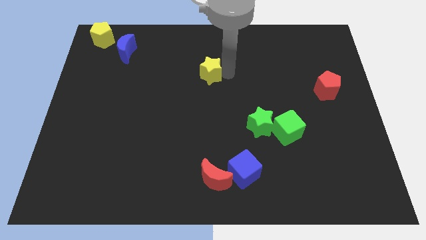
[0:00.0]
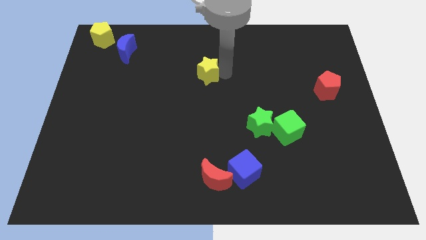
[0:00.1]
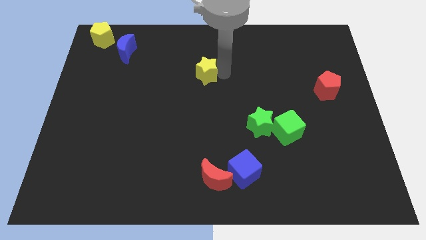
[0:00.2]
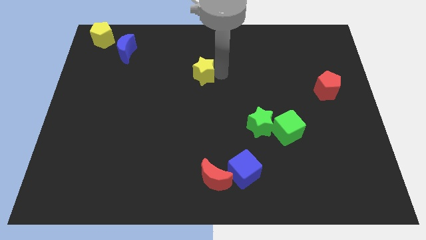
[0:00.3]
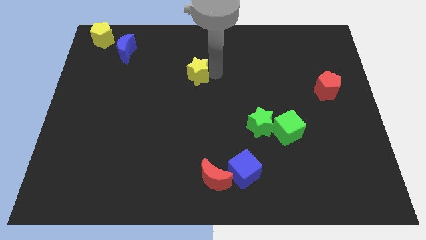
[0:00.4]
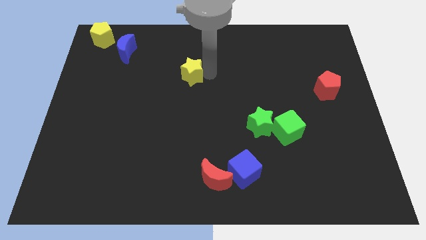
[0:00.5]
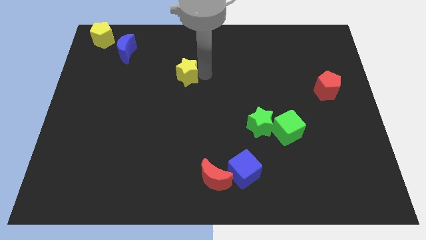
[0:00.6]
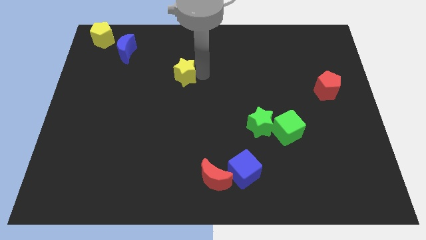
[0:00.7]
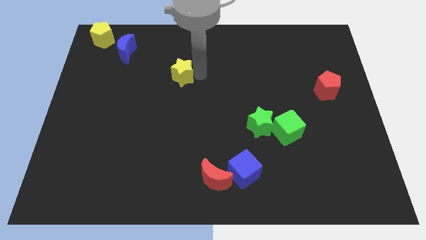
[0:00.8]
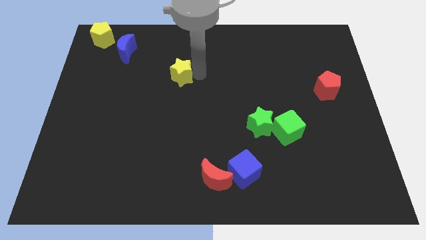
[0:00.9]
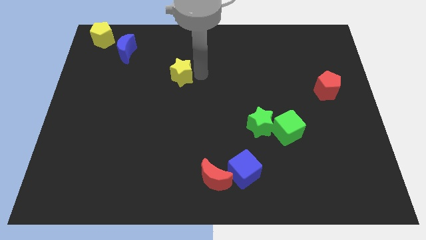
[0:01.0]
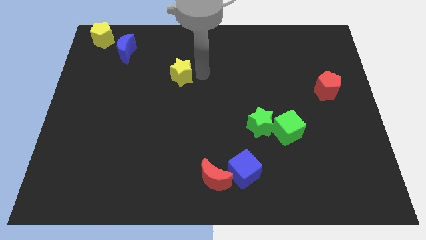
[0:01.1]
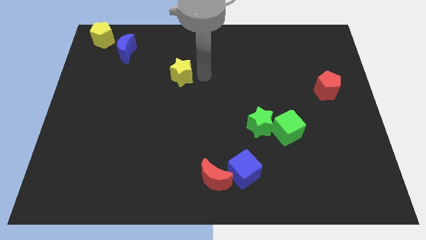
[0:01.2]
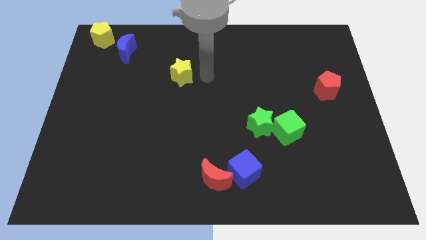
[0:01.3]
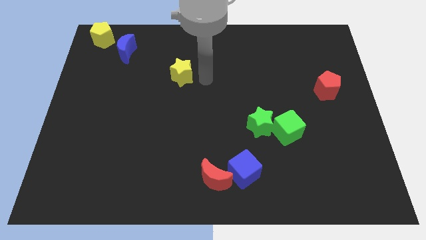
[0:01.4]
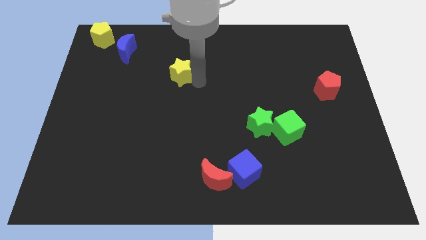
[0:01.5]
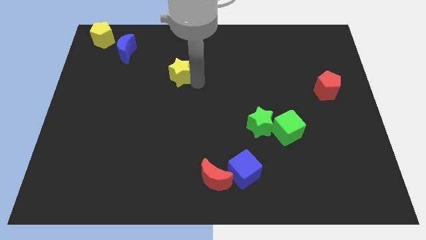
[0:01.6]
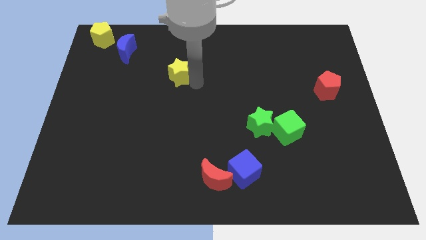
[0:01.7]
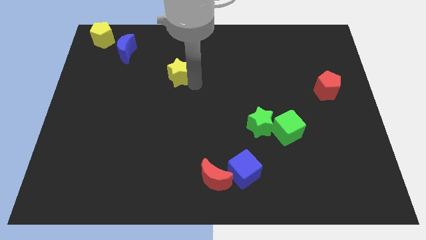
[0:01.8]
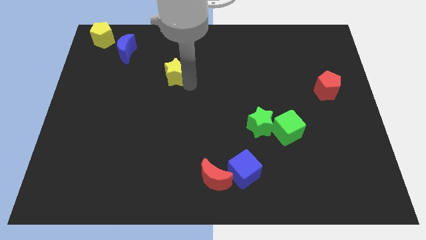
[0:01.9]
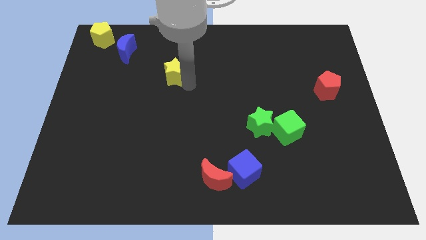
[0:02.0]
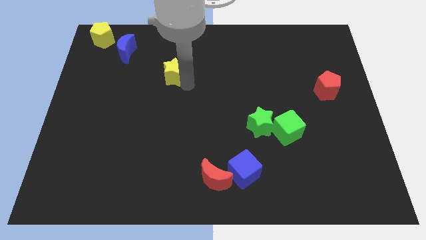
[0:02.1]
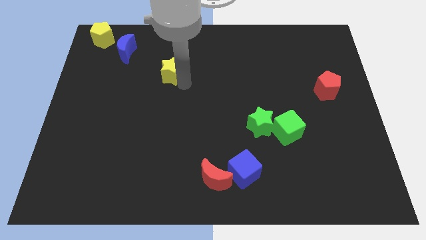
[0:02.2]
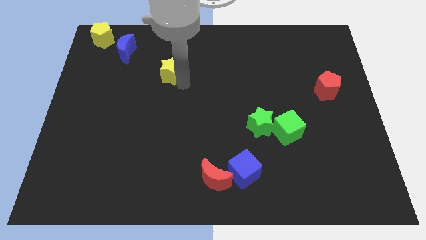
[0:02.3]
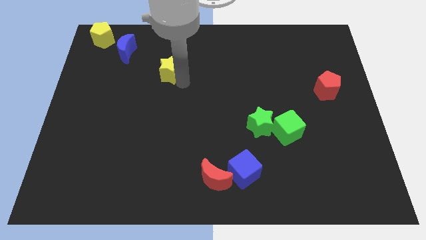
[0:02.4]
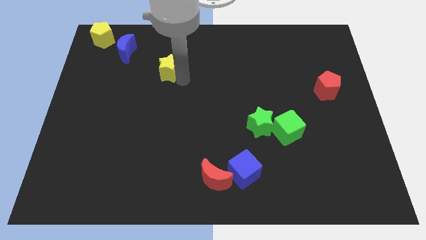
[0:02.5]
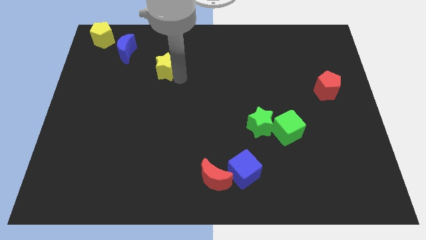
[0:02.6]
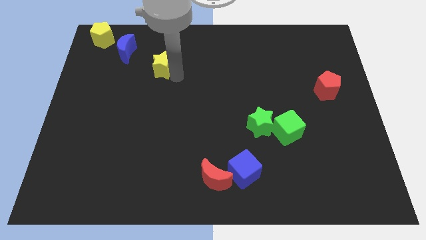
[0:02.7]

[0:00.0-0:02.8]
move the yellow star towards blue crescent

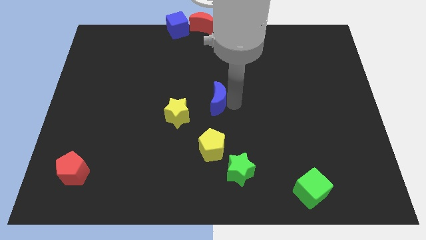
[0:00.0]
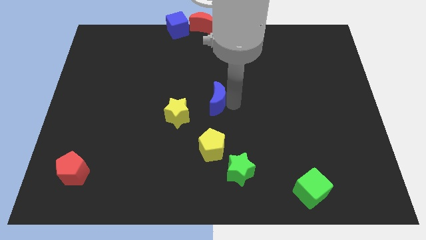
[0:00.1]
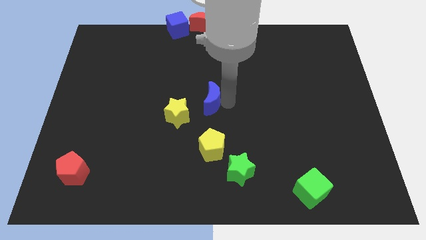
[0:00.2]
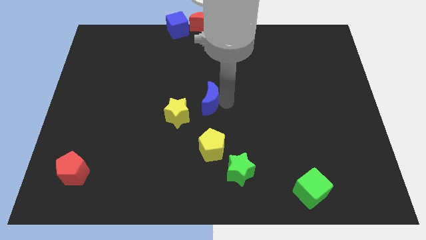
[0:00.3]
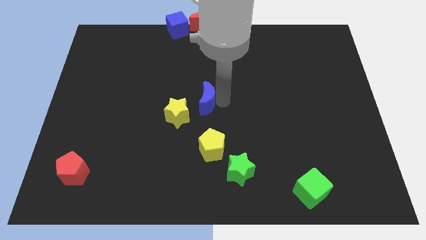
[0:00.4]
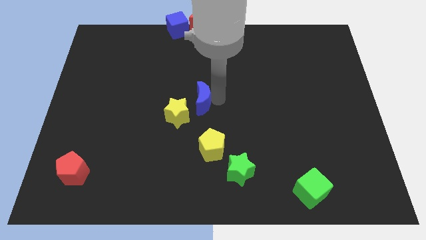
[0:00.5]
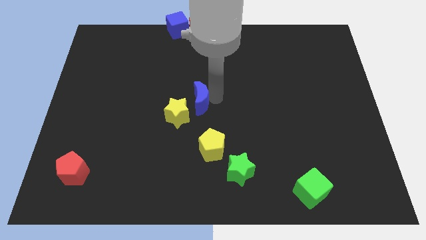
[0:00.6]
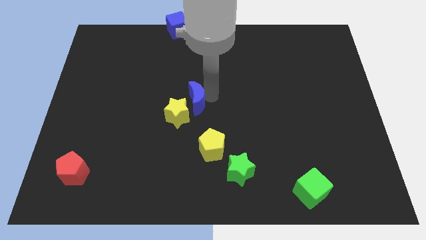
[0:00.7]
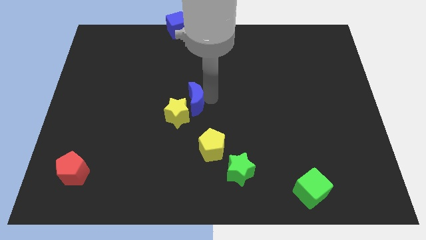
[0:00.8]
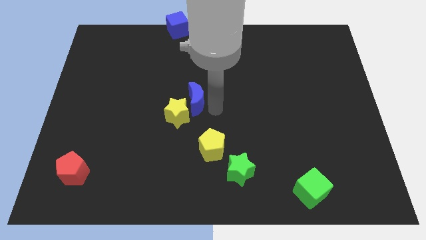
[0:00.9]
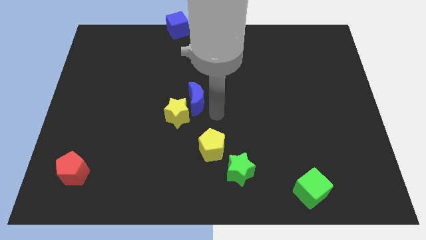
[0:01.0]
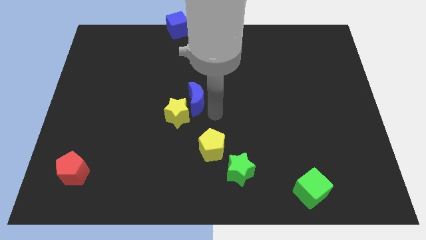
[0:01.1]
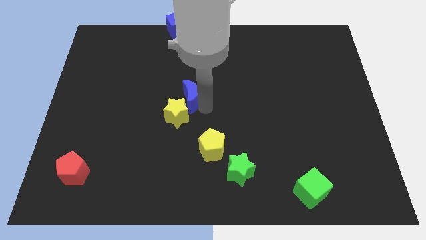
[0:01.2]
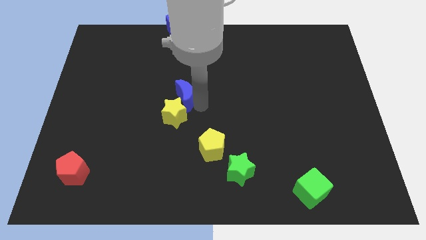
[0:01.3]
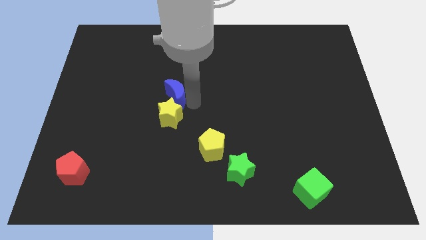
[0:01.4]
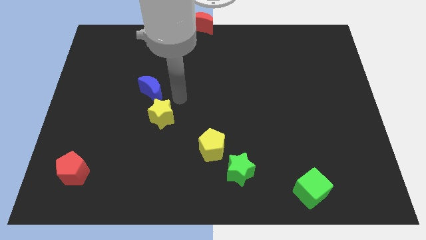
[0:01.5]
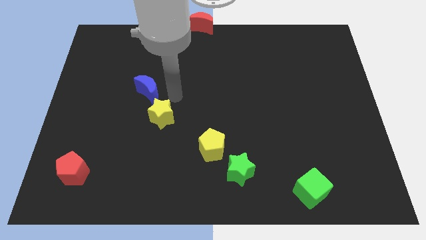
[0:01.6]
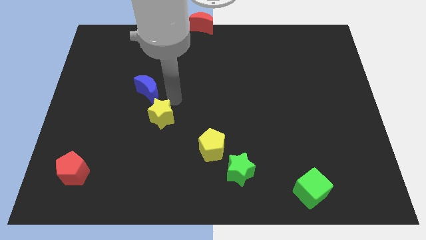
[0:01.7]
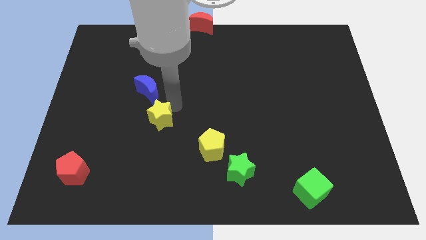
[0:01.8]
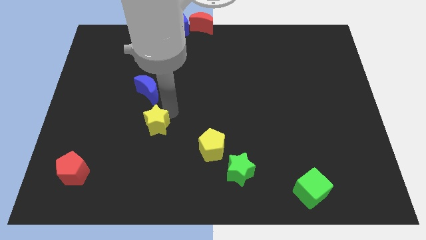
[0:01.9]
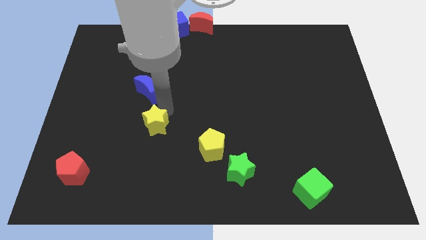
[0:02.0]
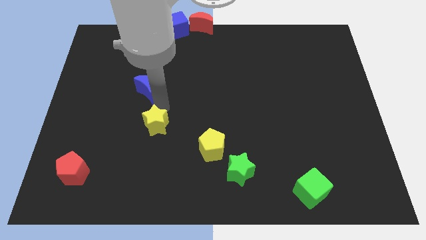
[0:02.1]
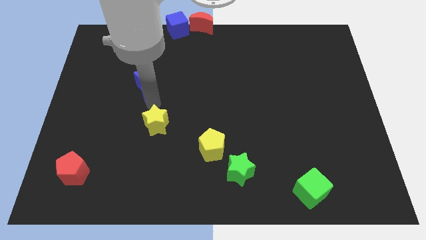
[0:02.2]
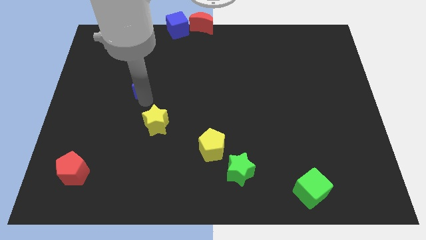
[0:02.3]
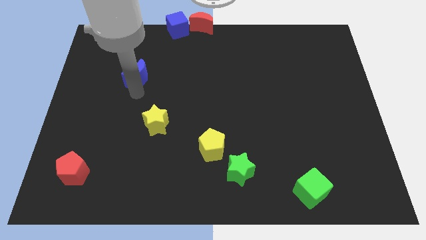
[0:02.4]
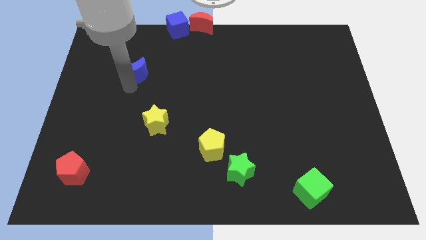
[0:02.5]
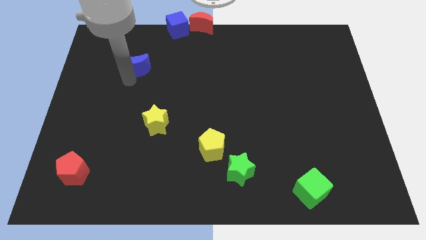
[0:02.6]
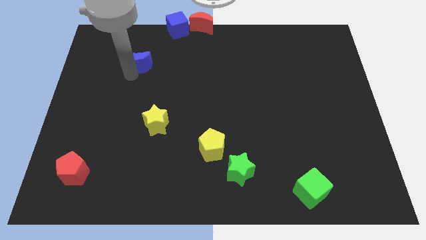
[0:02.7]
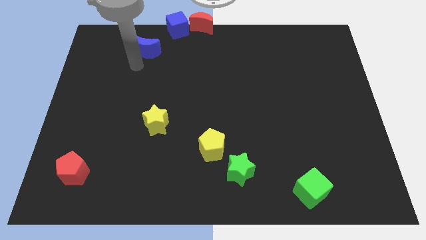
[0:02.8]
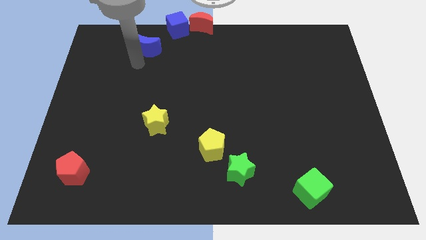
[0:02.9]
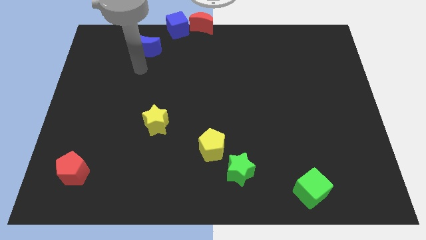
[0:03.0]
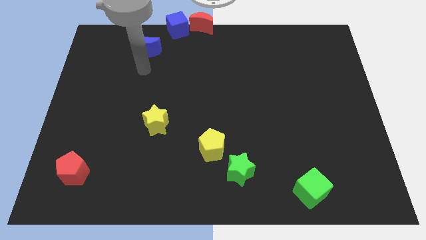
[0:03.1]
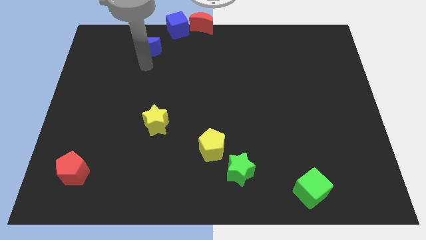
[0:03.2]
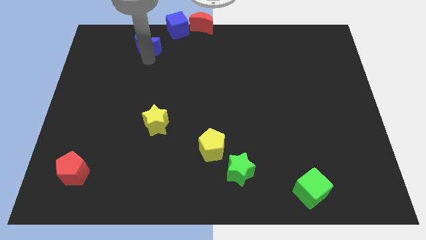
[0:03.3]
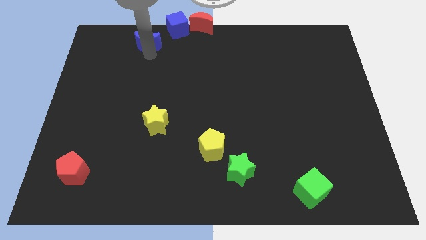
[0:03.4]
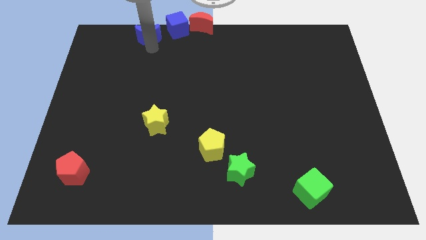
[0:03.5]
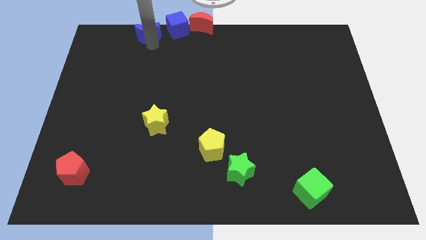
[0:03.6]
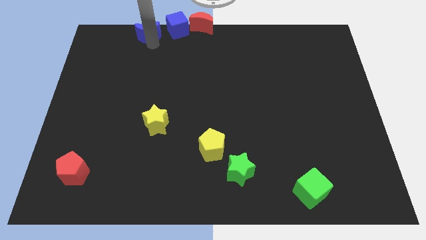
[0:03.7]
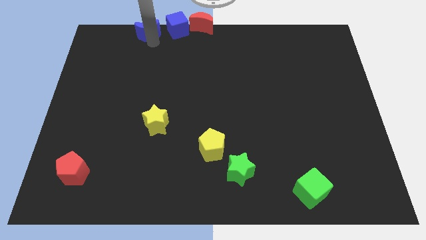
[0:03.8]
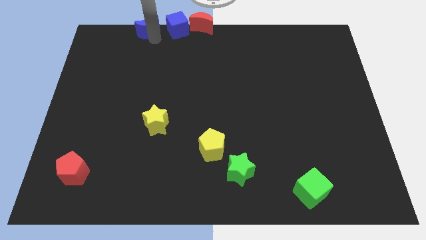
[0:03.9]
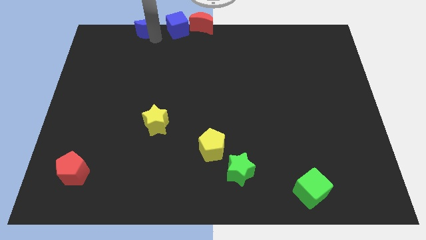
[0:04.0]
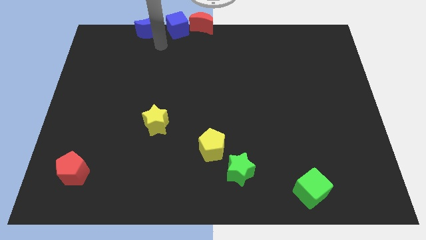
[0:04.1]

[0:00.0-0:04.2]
place the blue crescent to the left of the blue cube

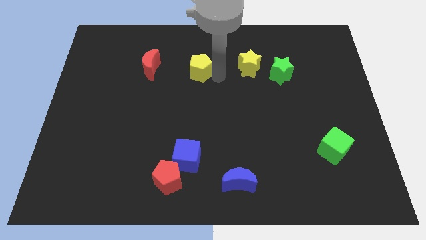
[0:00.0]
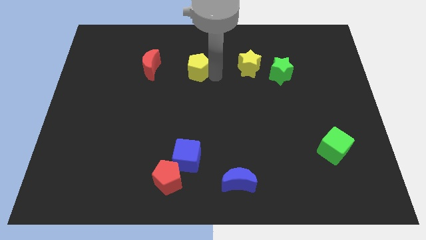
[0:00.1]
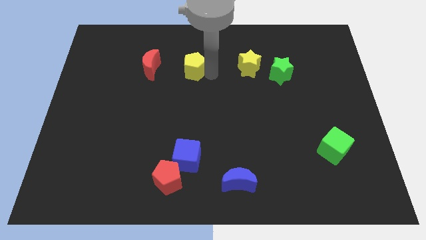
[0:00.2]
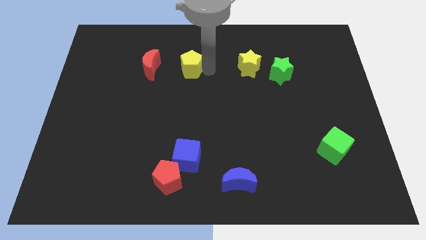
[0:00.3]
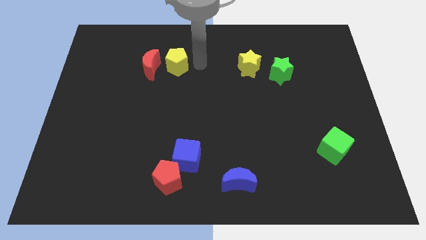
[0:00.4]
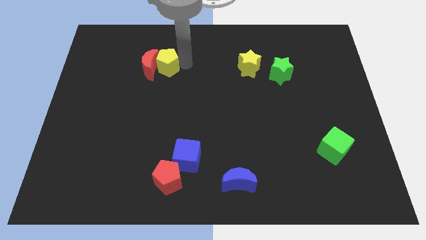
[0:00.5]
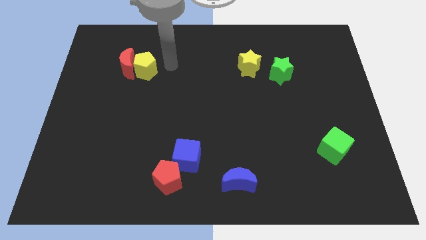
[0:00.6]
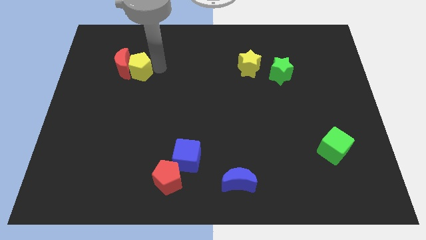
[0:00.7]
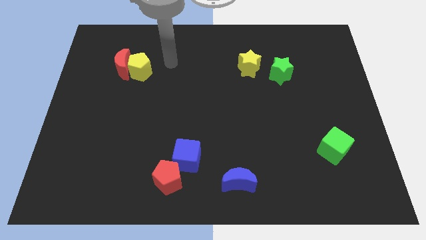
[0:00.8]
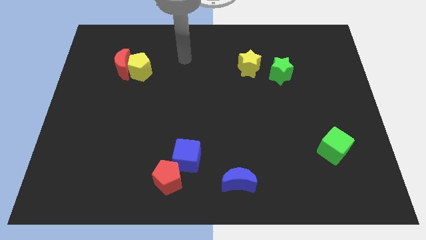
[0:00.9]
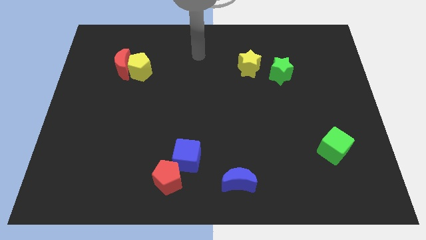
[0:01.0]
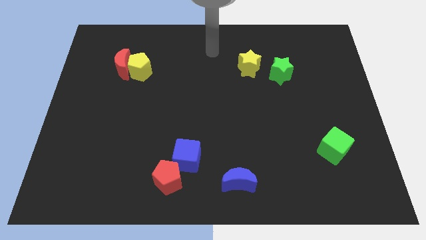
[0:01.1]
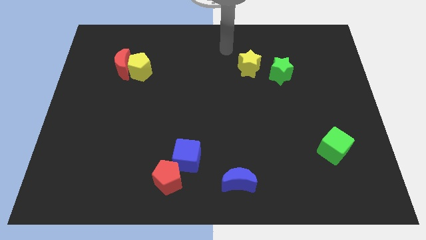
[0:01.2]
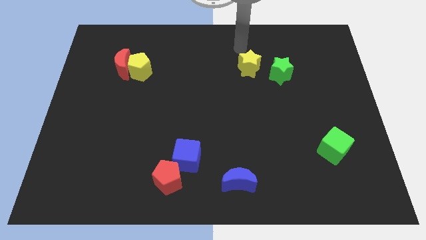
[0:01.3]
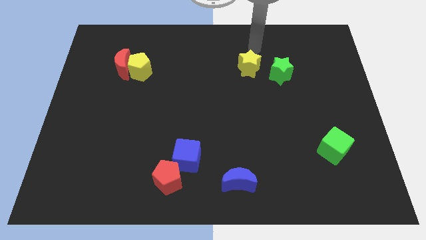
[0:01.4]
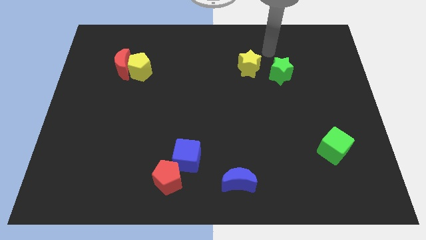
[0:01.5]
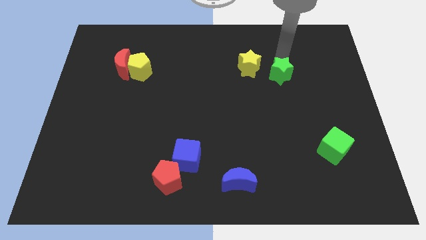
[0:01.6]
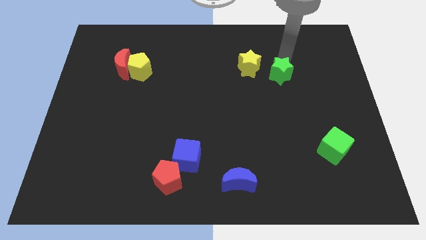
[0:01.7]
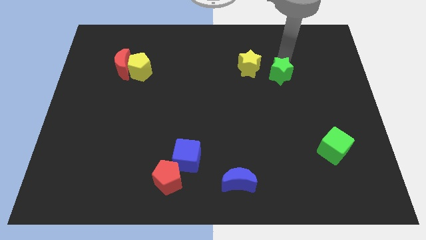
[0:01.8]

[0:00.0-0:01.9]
move the yellow pentagon to the red crescent
